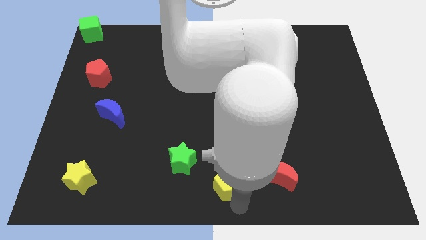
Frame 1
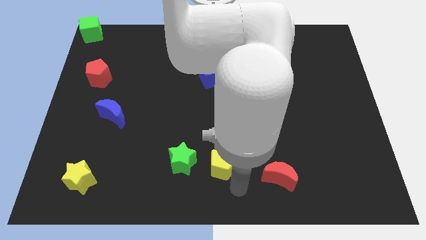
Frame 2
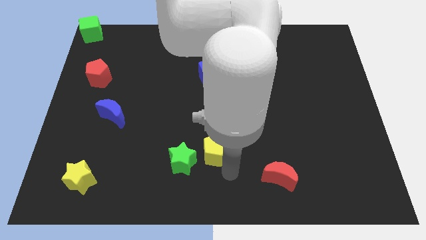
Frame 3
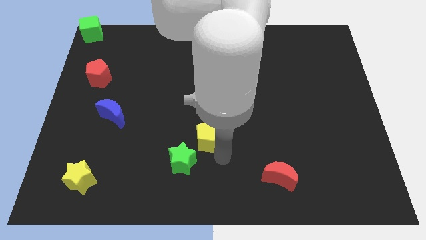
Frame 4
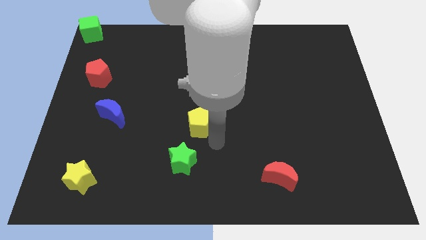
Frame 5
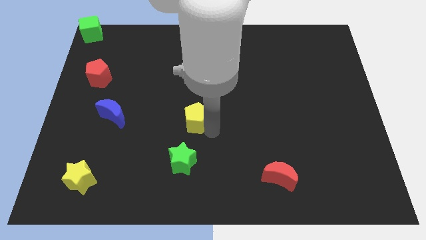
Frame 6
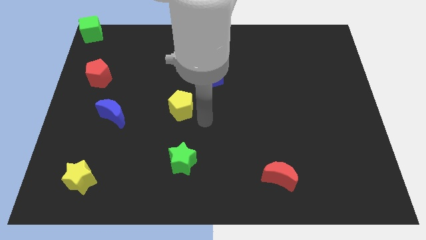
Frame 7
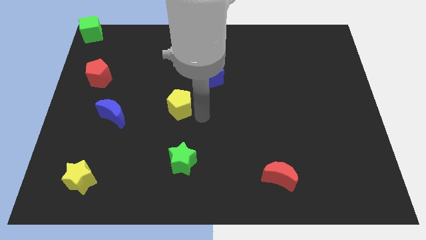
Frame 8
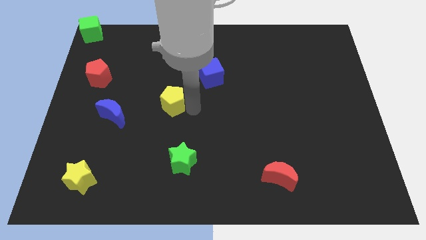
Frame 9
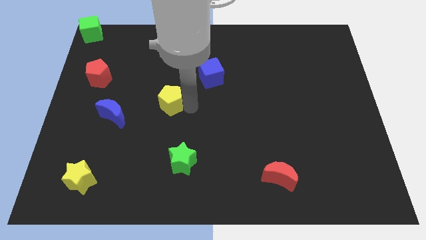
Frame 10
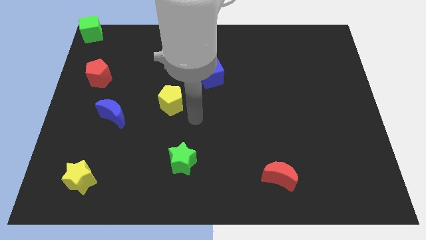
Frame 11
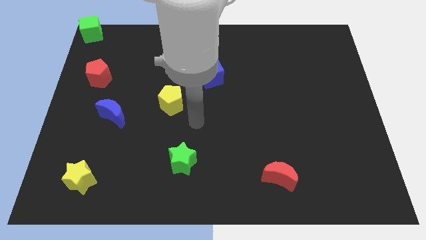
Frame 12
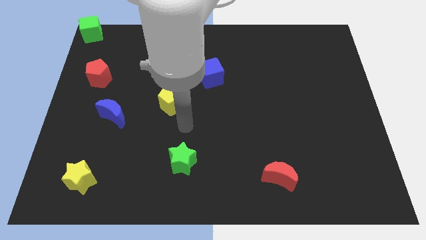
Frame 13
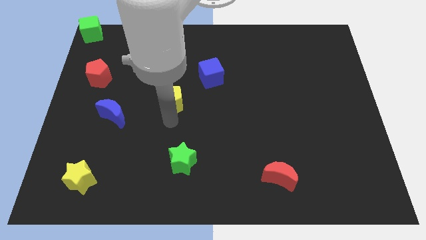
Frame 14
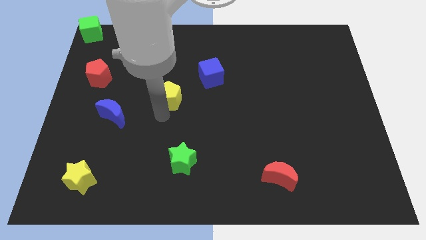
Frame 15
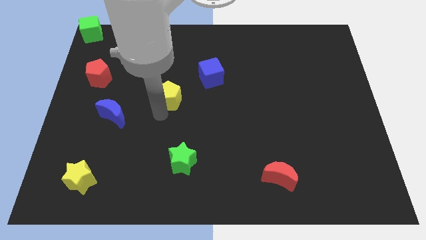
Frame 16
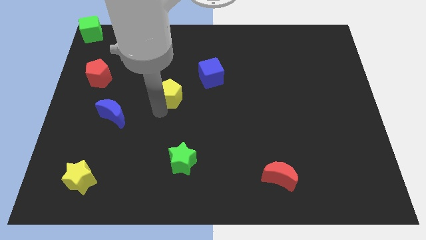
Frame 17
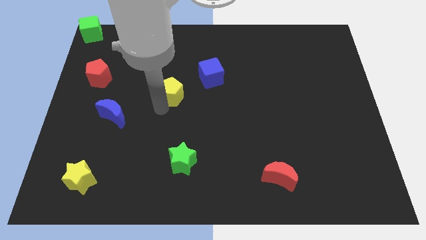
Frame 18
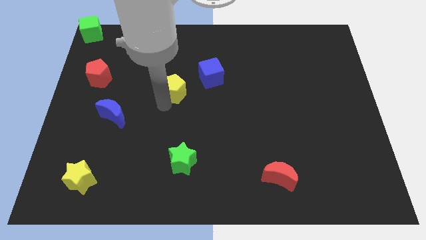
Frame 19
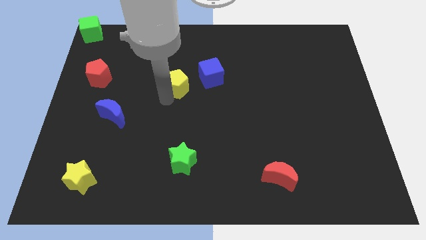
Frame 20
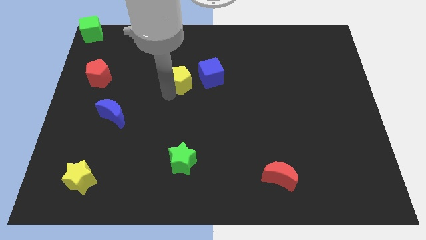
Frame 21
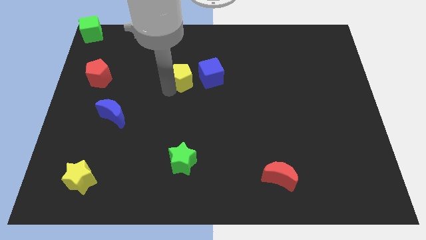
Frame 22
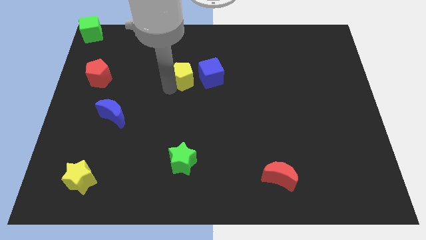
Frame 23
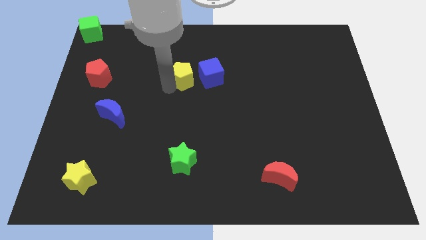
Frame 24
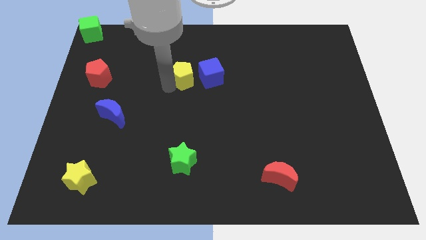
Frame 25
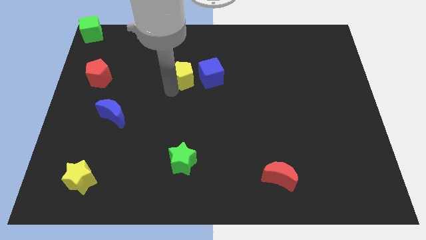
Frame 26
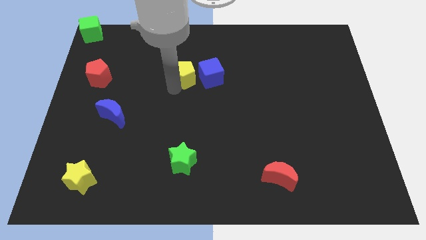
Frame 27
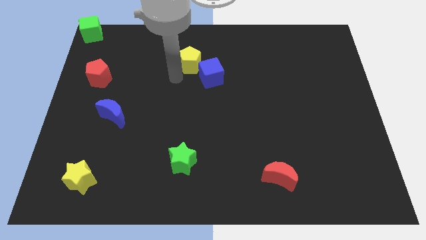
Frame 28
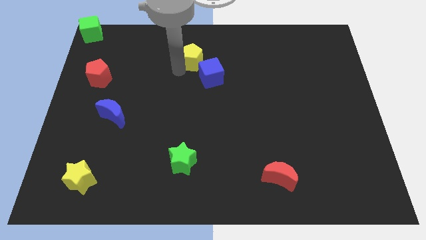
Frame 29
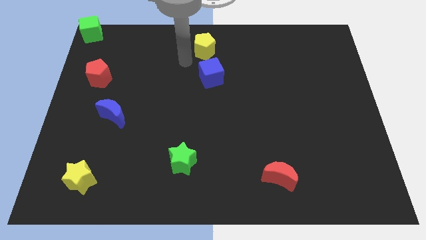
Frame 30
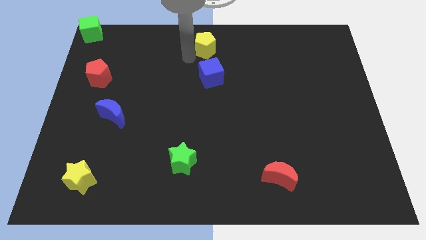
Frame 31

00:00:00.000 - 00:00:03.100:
move the yellow pentagon to the top of blue cube

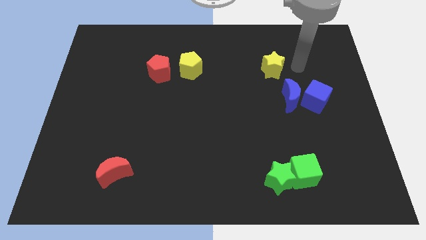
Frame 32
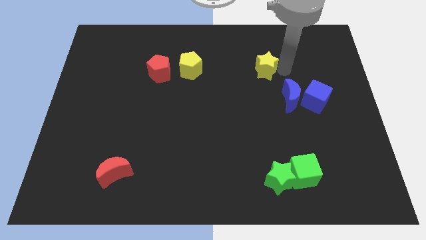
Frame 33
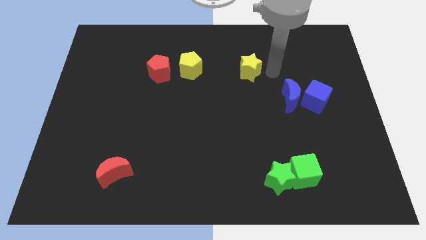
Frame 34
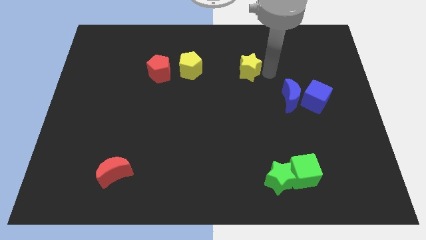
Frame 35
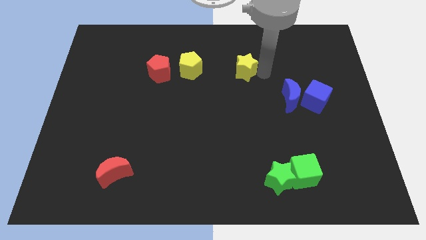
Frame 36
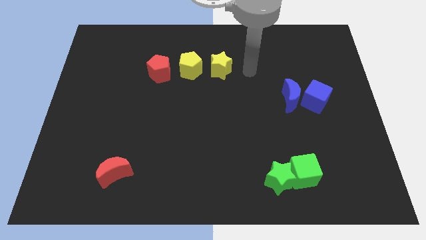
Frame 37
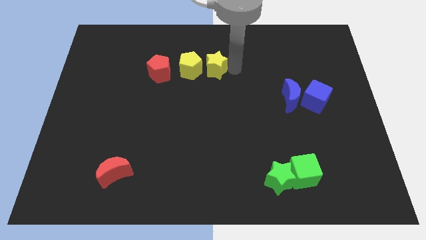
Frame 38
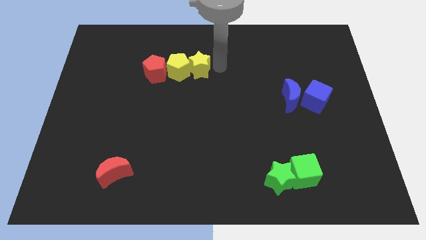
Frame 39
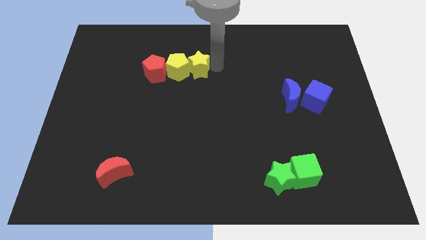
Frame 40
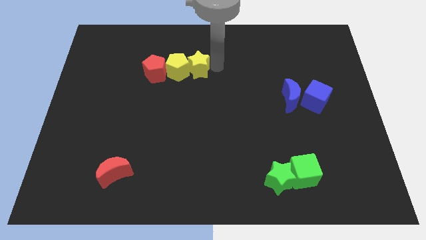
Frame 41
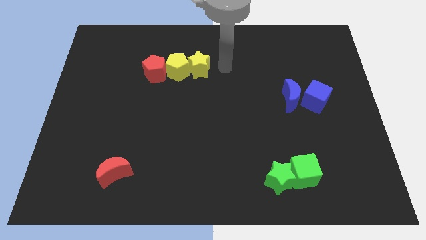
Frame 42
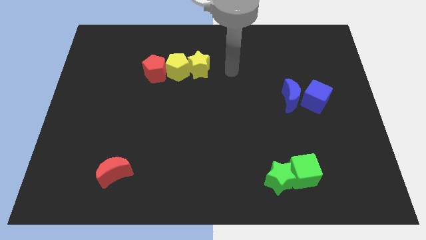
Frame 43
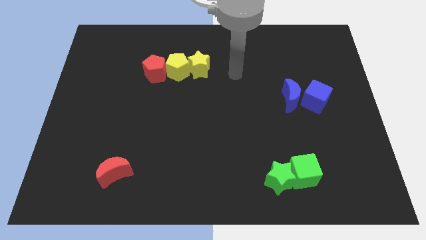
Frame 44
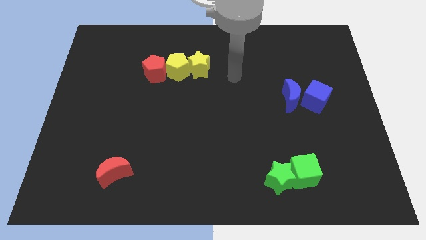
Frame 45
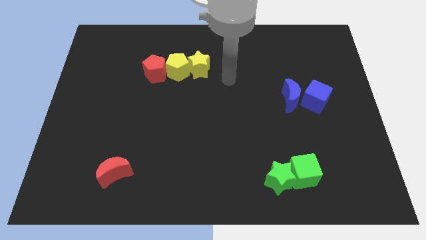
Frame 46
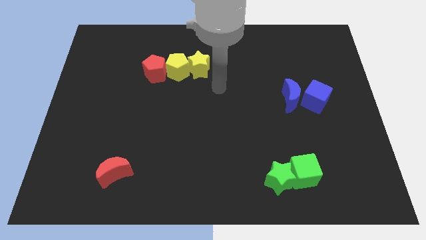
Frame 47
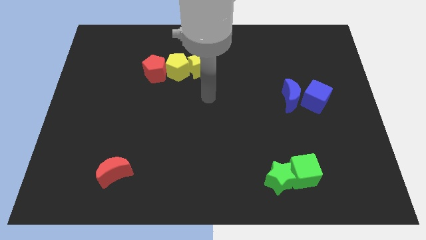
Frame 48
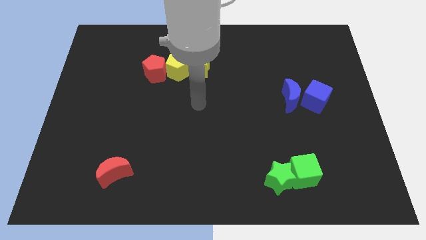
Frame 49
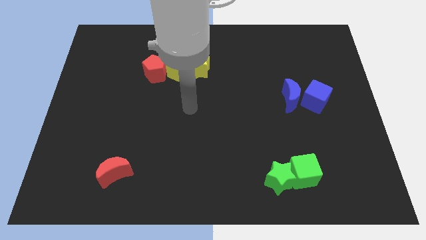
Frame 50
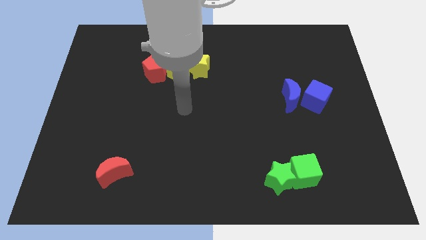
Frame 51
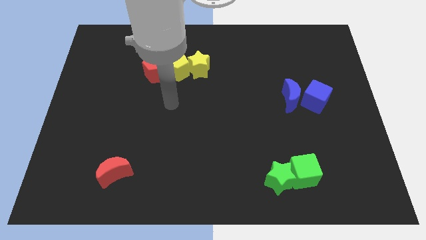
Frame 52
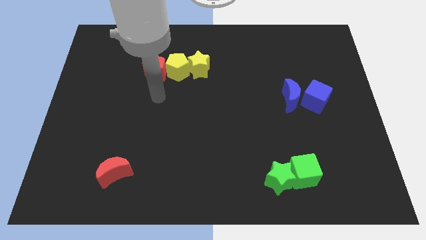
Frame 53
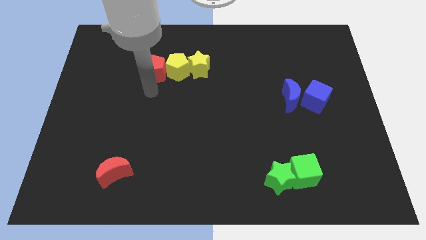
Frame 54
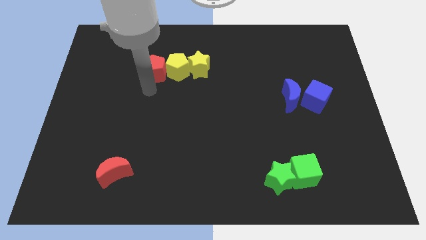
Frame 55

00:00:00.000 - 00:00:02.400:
push yellow star towards yellow pentagon

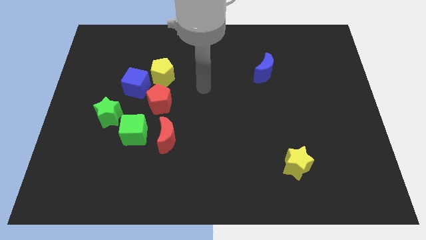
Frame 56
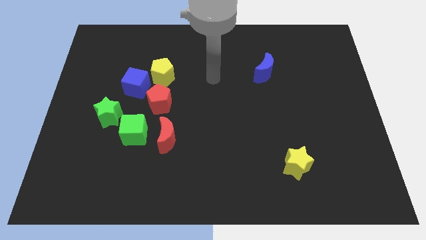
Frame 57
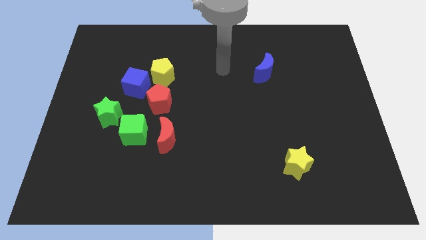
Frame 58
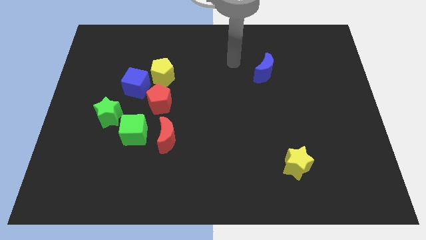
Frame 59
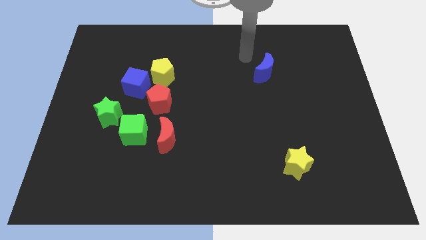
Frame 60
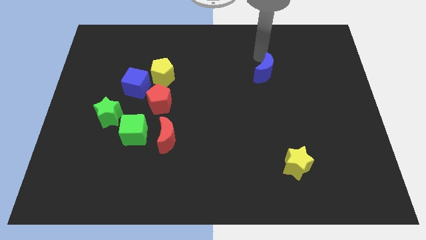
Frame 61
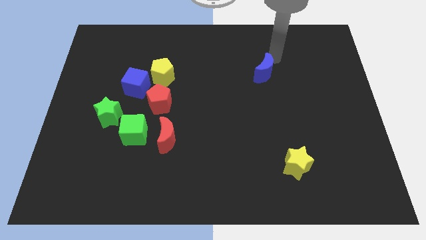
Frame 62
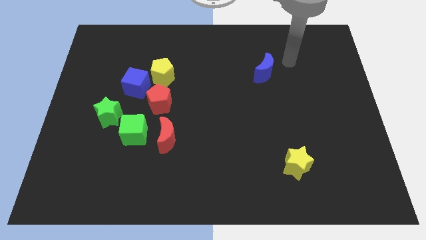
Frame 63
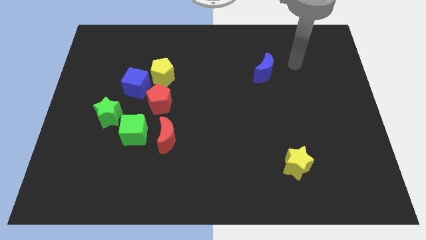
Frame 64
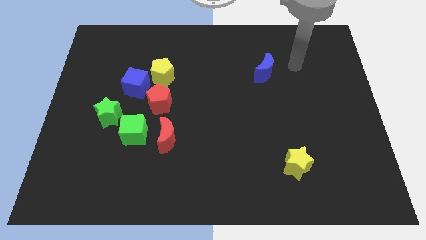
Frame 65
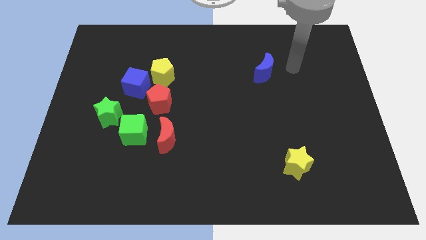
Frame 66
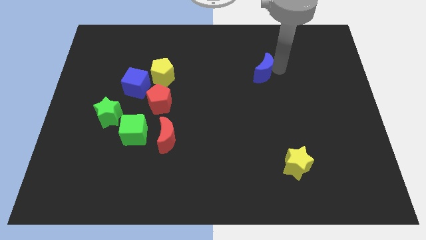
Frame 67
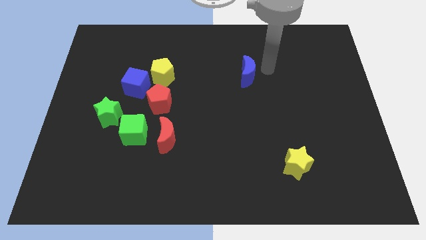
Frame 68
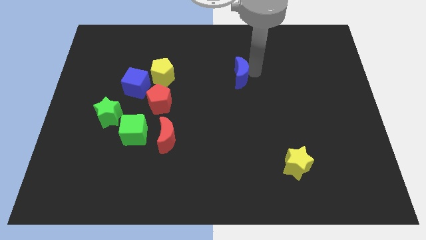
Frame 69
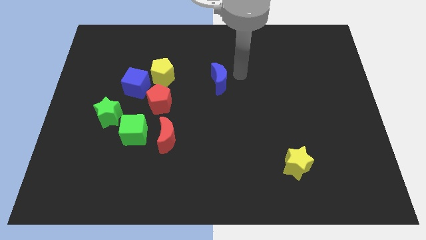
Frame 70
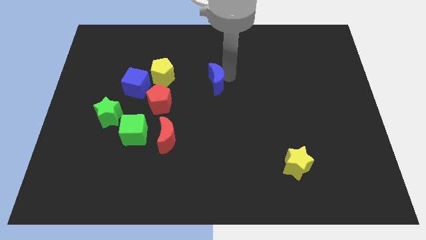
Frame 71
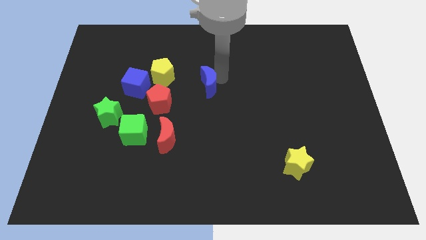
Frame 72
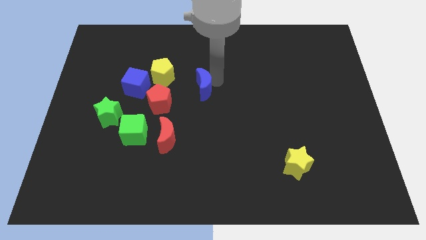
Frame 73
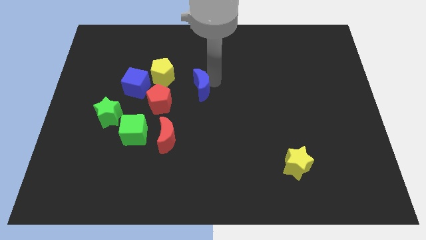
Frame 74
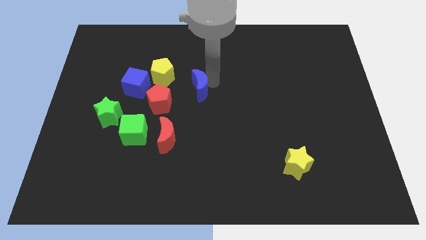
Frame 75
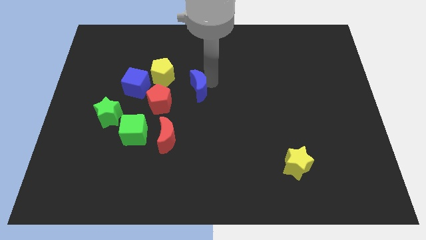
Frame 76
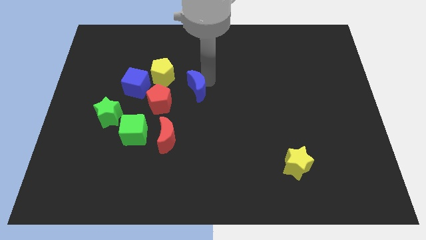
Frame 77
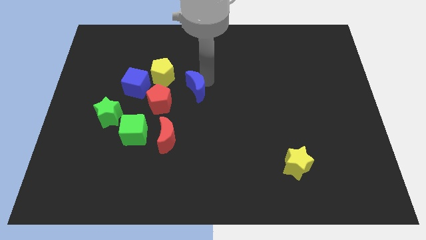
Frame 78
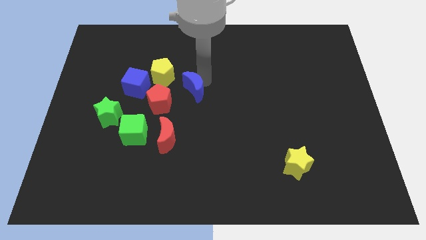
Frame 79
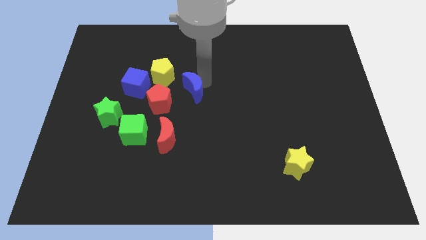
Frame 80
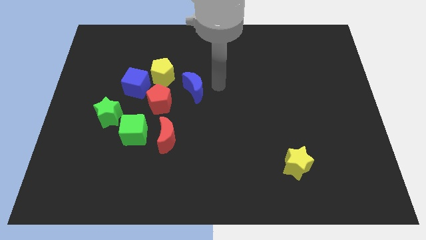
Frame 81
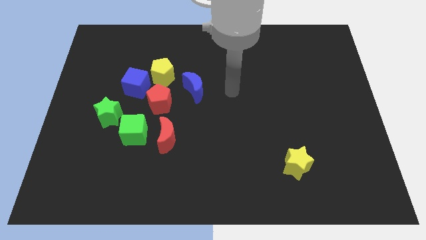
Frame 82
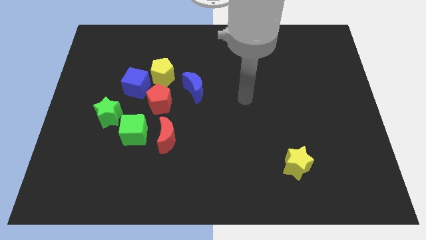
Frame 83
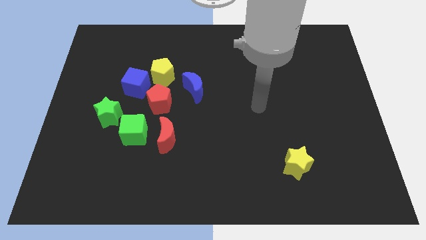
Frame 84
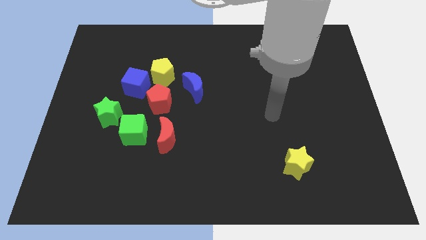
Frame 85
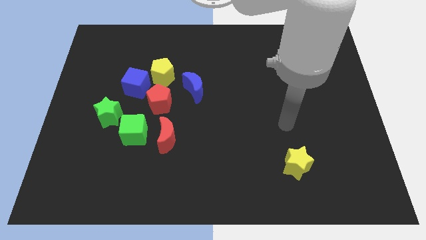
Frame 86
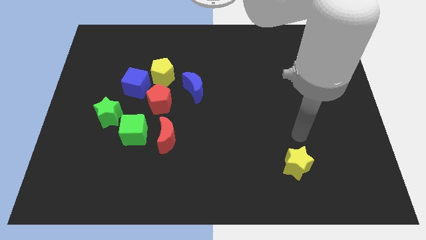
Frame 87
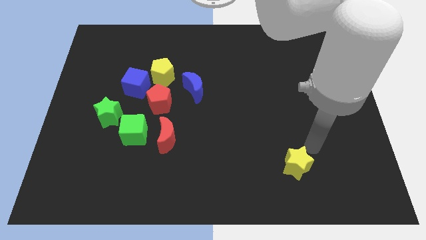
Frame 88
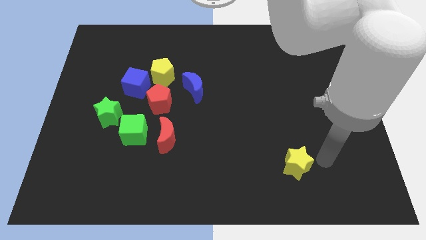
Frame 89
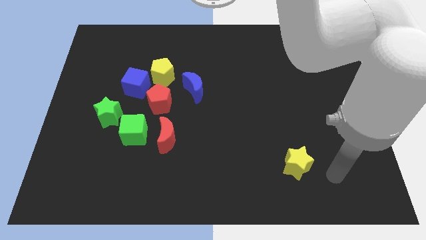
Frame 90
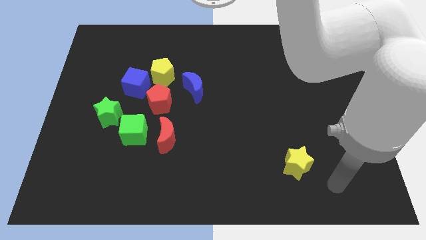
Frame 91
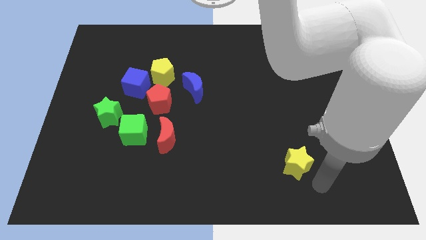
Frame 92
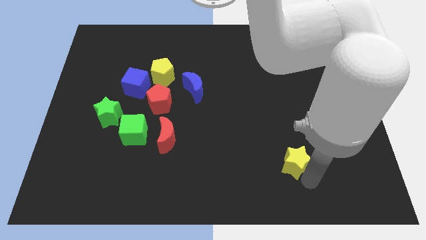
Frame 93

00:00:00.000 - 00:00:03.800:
move blue crescent towards red pentagon
